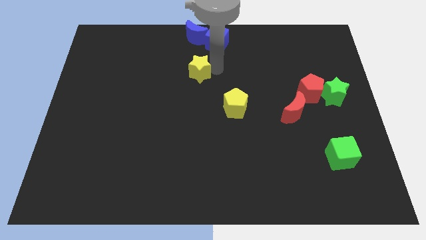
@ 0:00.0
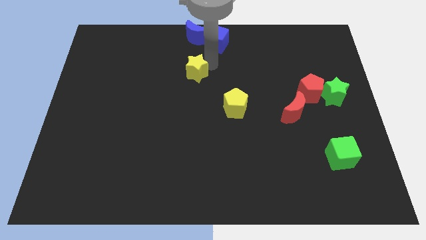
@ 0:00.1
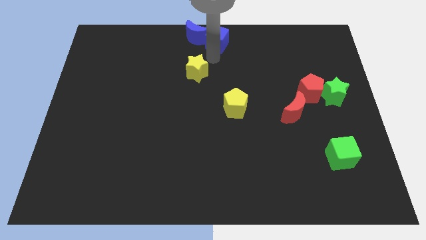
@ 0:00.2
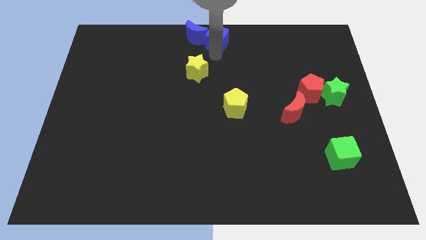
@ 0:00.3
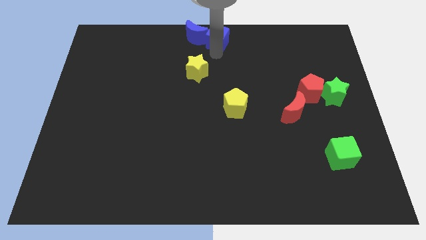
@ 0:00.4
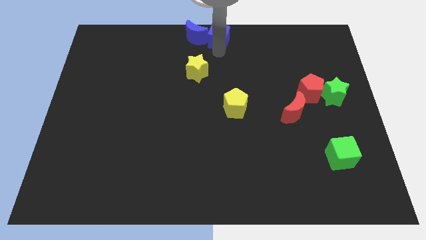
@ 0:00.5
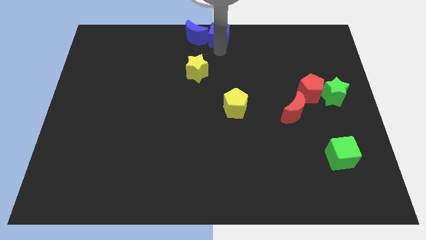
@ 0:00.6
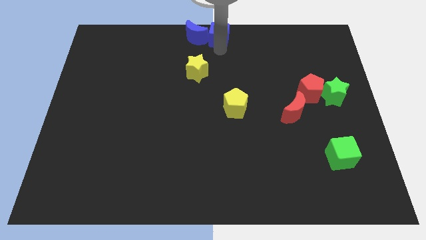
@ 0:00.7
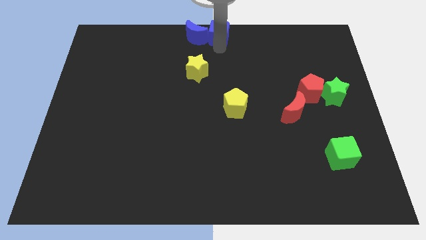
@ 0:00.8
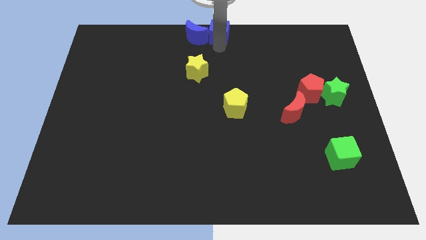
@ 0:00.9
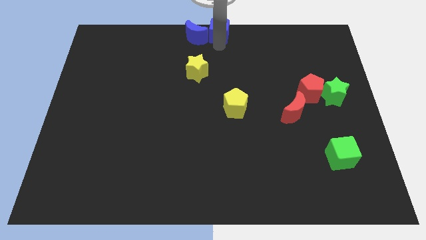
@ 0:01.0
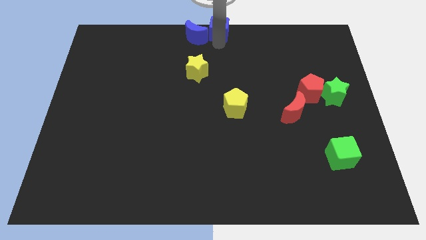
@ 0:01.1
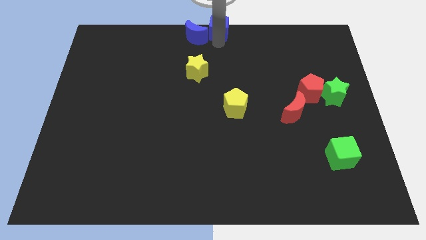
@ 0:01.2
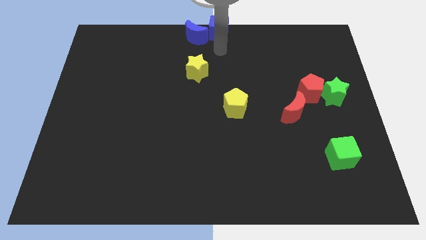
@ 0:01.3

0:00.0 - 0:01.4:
place blue cube beside blue crescent

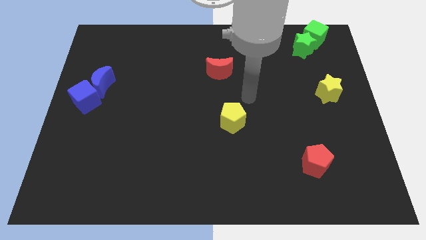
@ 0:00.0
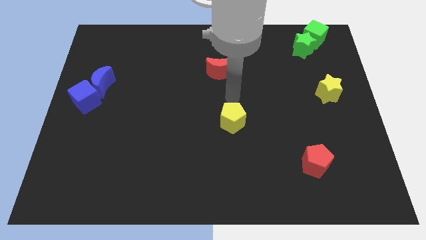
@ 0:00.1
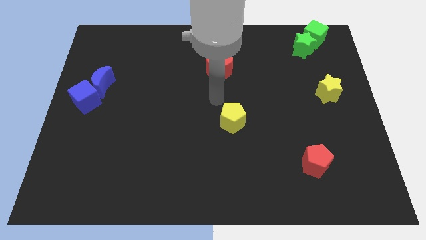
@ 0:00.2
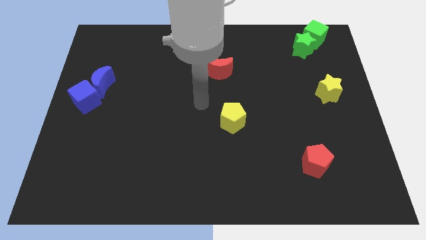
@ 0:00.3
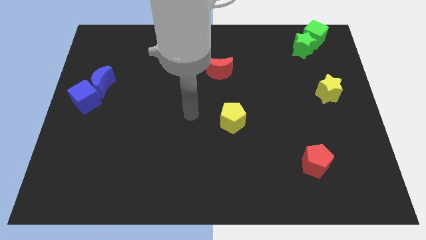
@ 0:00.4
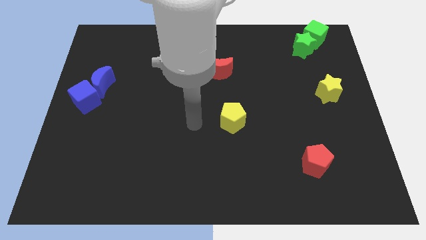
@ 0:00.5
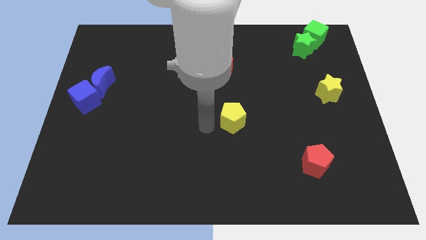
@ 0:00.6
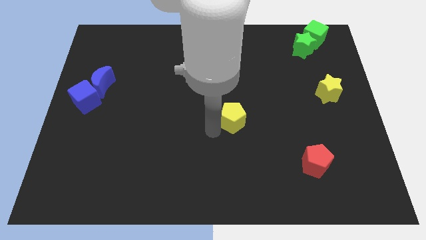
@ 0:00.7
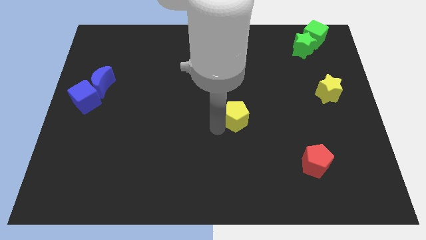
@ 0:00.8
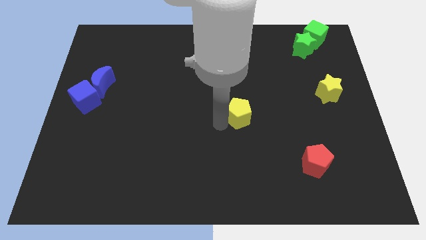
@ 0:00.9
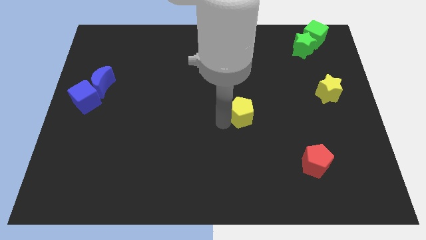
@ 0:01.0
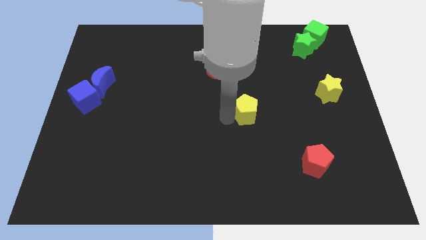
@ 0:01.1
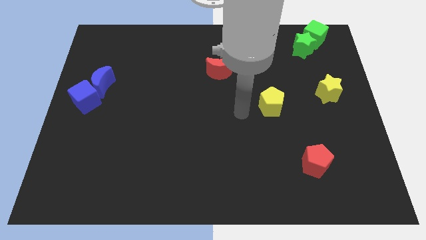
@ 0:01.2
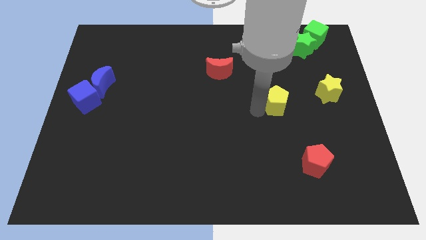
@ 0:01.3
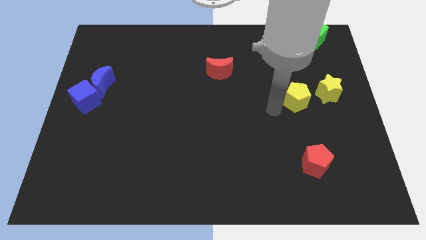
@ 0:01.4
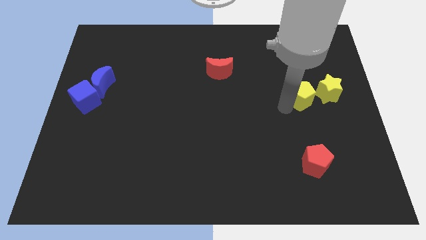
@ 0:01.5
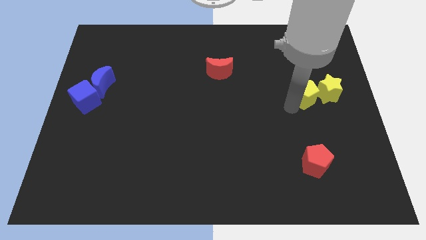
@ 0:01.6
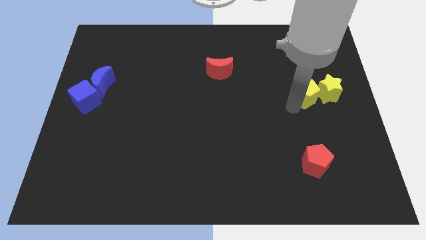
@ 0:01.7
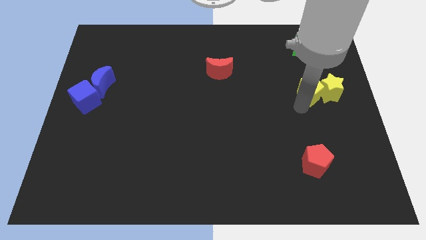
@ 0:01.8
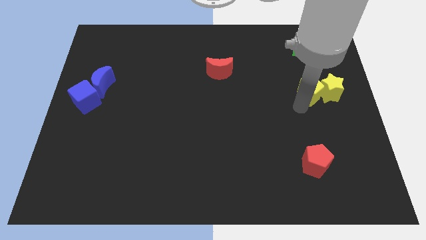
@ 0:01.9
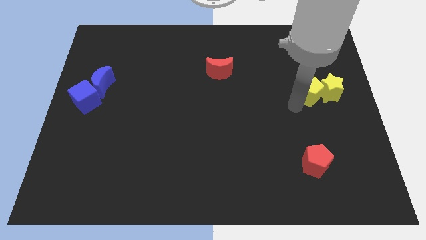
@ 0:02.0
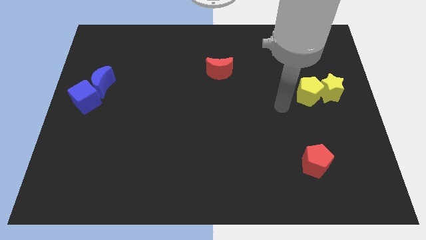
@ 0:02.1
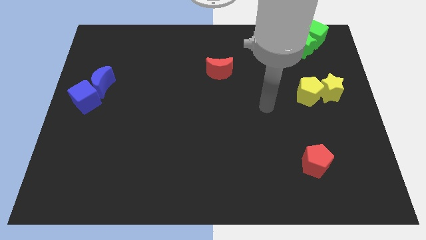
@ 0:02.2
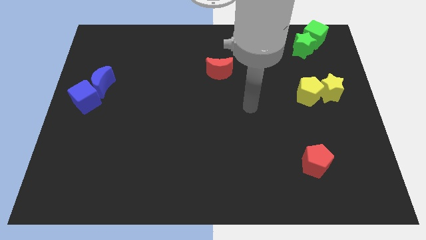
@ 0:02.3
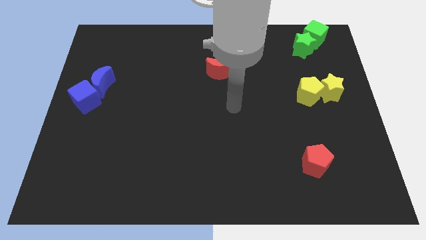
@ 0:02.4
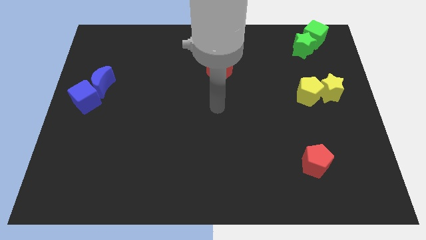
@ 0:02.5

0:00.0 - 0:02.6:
push the yellow pentagon into the yellow star

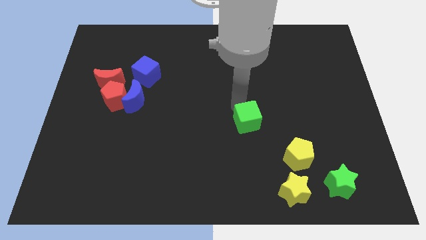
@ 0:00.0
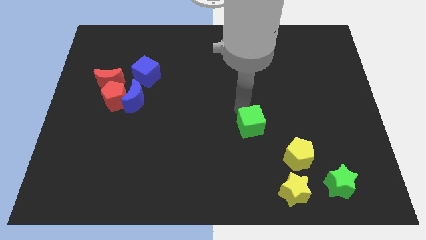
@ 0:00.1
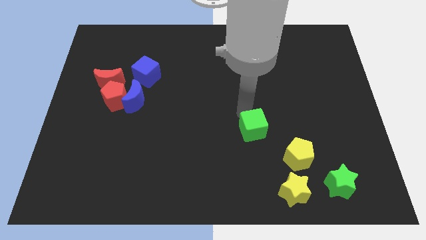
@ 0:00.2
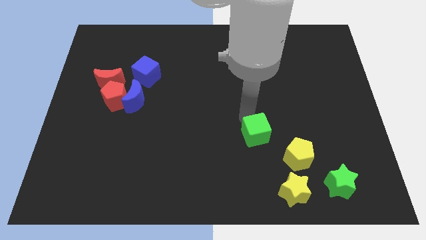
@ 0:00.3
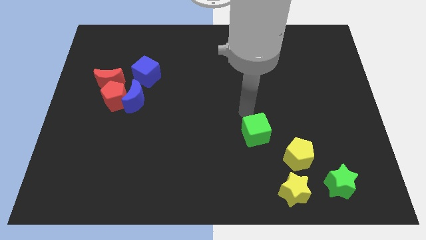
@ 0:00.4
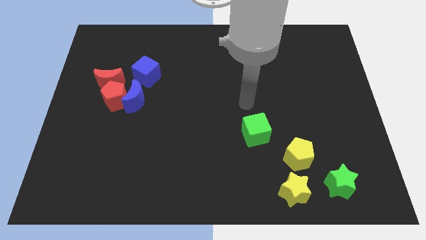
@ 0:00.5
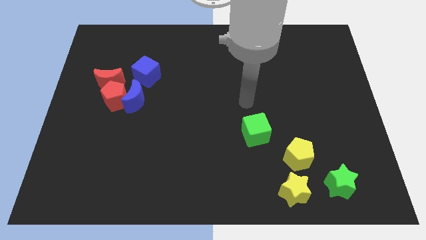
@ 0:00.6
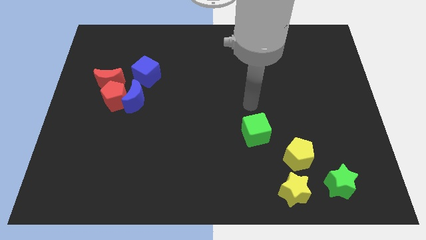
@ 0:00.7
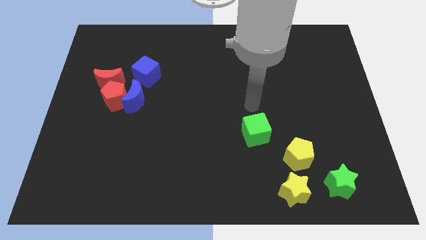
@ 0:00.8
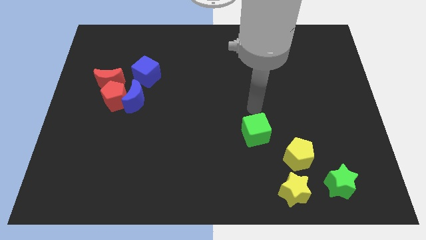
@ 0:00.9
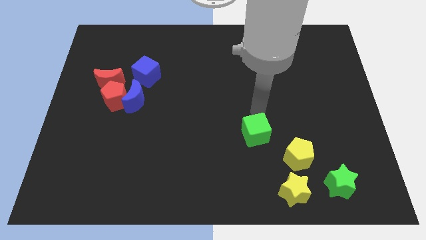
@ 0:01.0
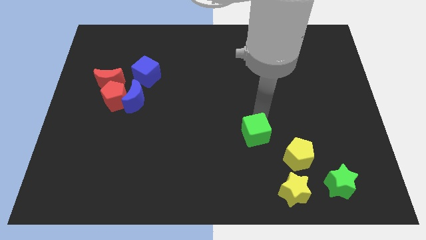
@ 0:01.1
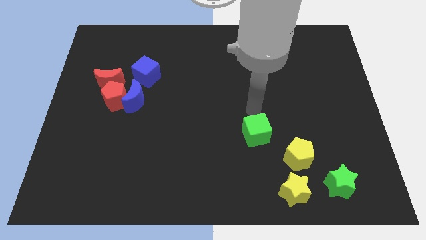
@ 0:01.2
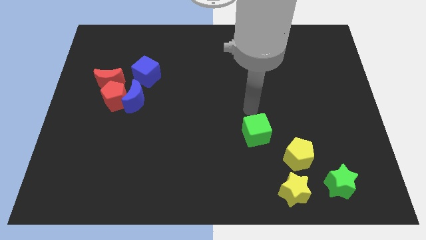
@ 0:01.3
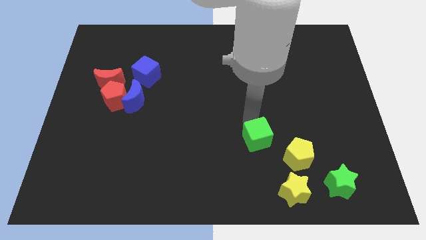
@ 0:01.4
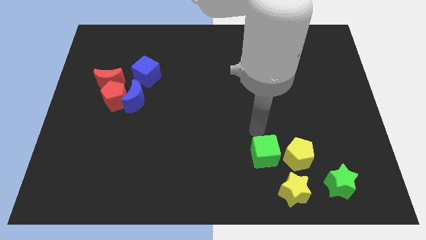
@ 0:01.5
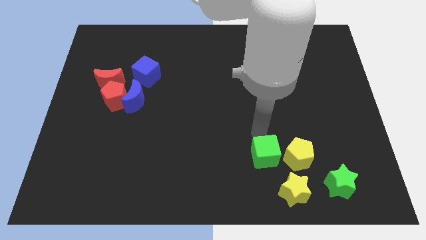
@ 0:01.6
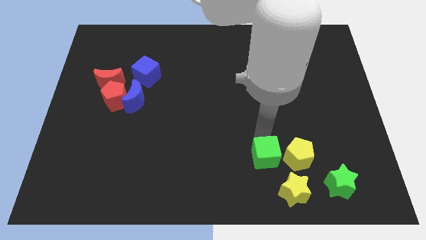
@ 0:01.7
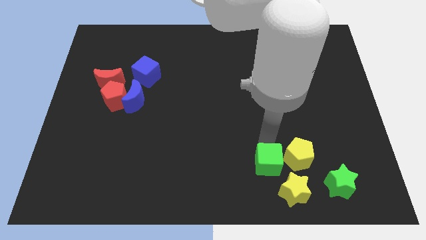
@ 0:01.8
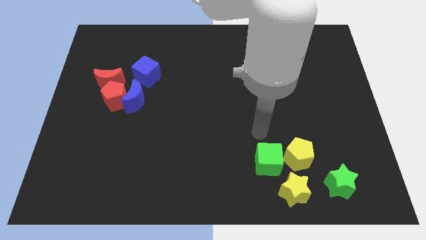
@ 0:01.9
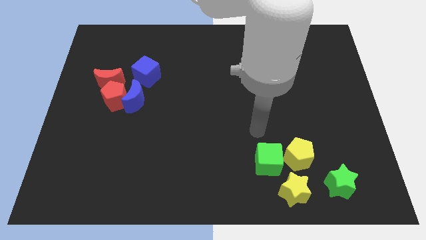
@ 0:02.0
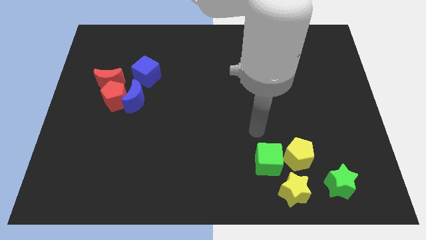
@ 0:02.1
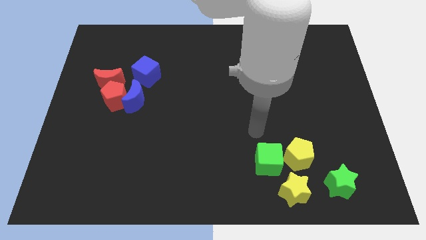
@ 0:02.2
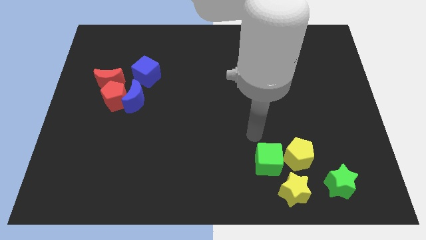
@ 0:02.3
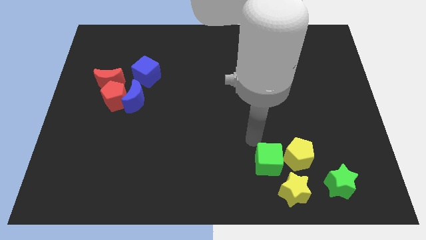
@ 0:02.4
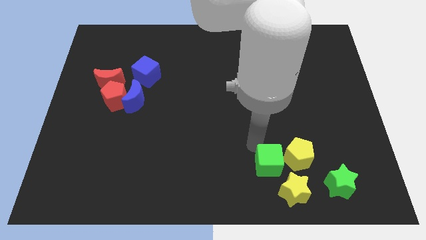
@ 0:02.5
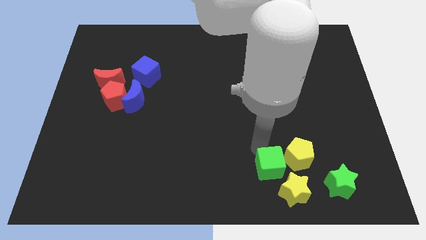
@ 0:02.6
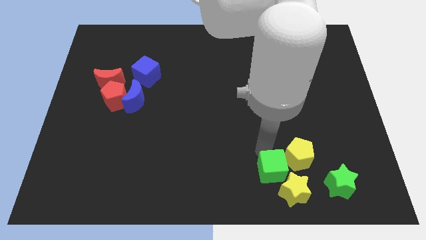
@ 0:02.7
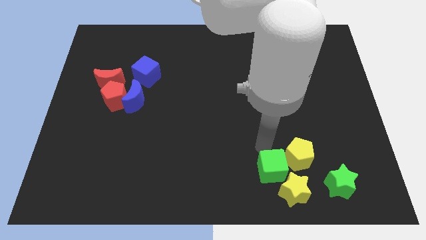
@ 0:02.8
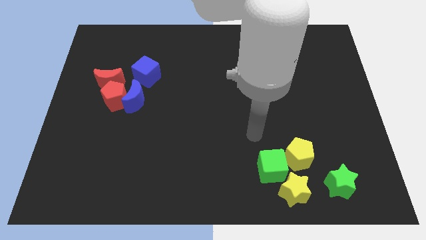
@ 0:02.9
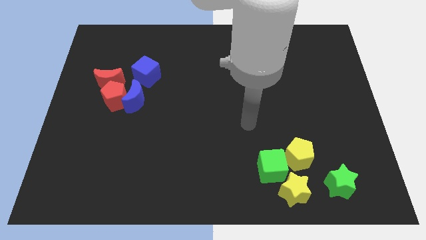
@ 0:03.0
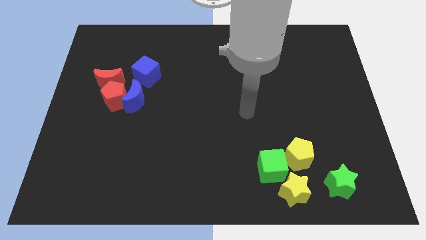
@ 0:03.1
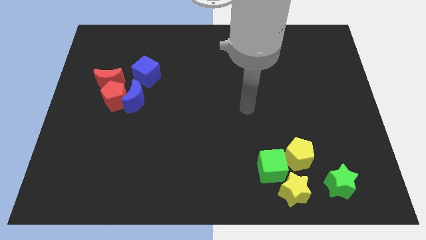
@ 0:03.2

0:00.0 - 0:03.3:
push the green cube to the bottom left side of the yellow pentagon

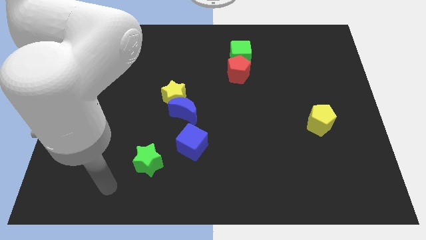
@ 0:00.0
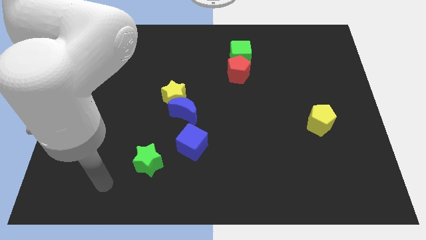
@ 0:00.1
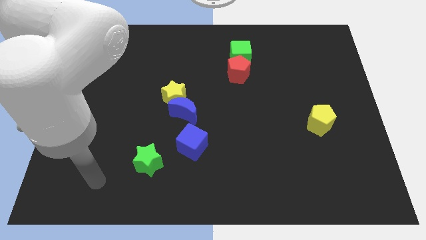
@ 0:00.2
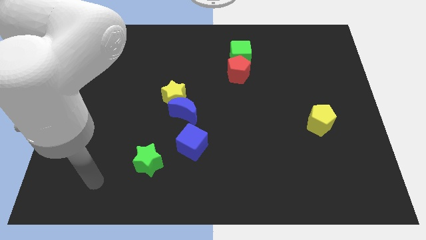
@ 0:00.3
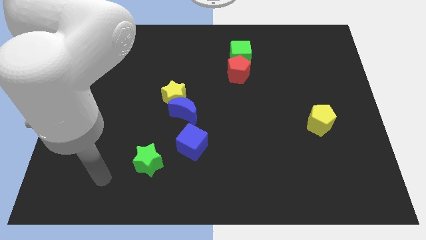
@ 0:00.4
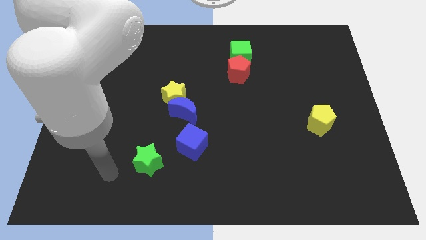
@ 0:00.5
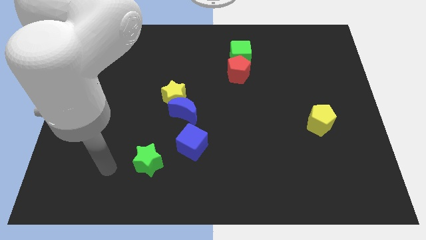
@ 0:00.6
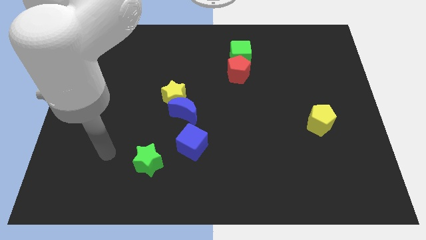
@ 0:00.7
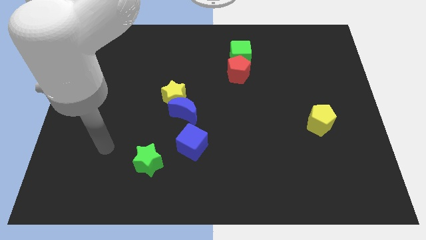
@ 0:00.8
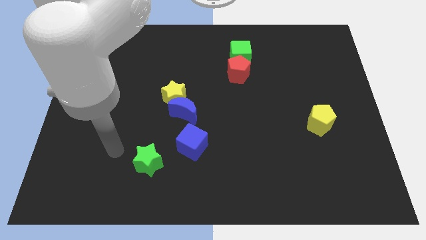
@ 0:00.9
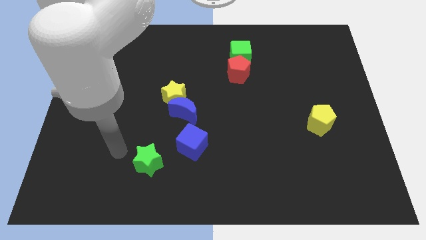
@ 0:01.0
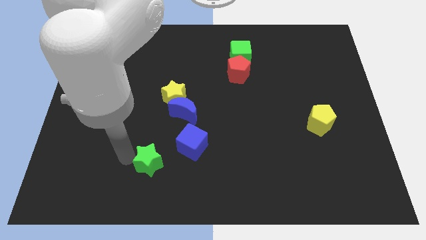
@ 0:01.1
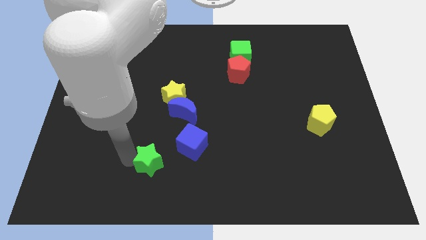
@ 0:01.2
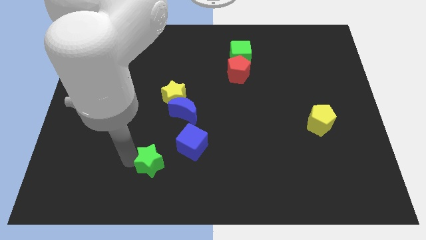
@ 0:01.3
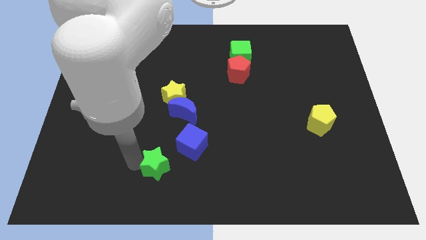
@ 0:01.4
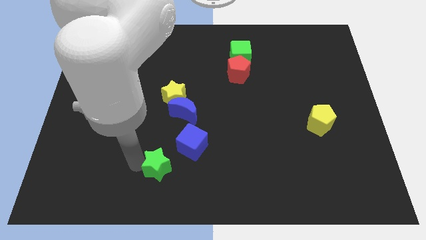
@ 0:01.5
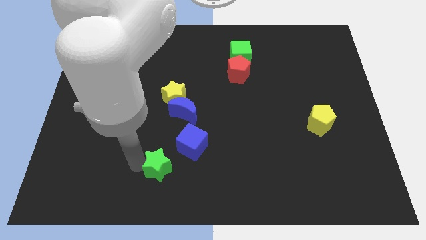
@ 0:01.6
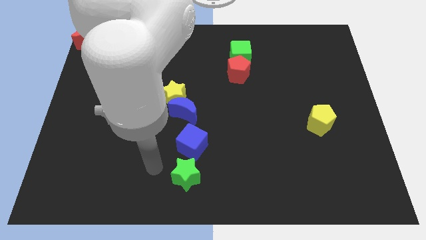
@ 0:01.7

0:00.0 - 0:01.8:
put the green star at the bottom of blue cube

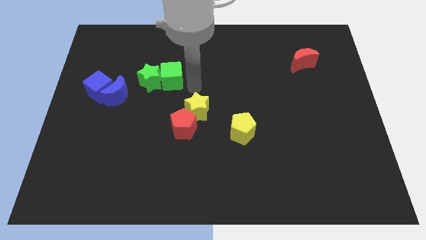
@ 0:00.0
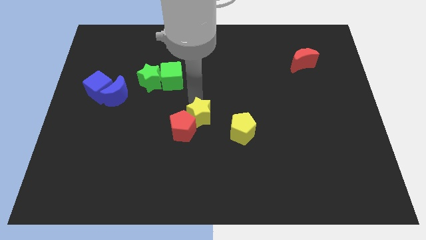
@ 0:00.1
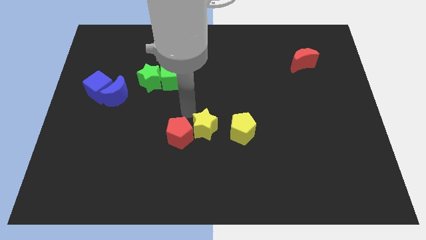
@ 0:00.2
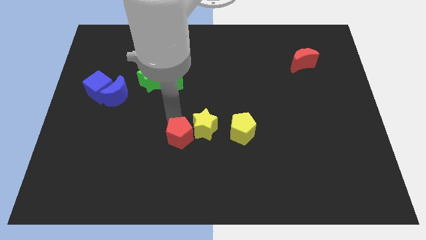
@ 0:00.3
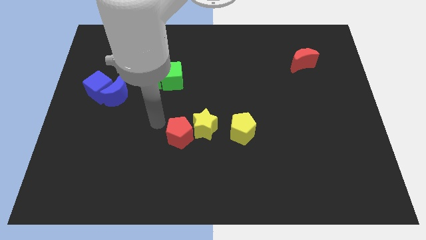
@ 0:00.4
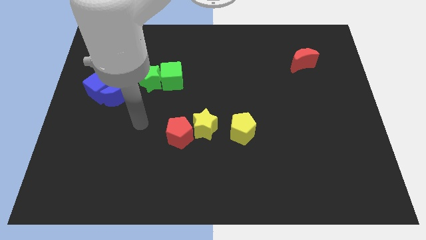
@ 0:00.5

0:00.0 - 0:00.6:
move the yellow star to the right of the red pentagon
